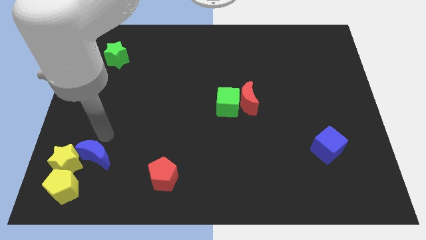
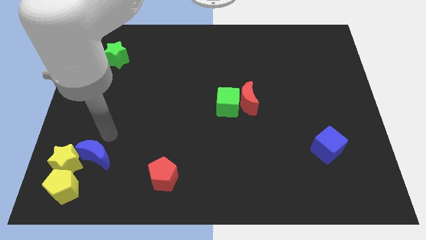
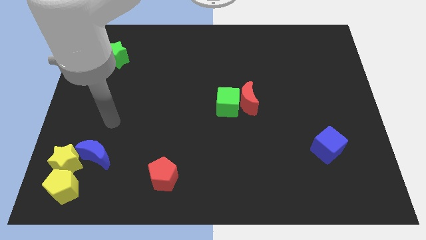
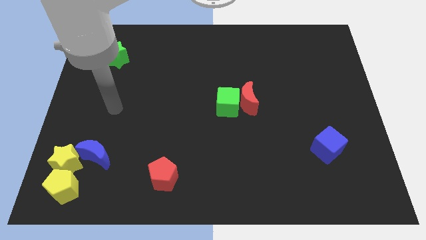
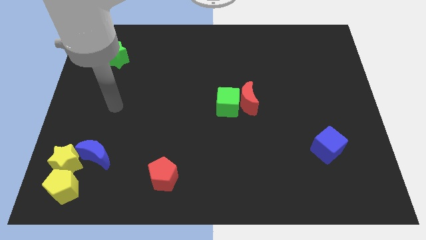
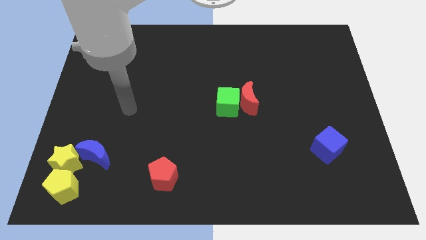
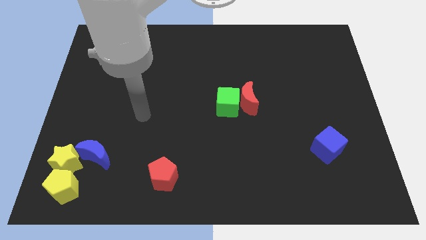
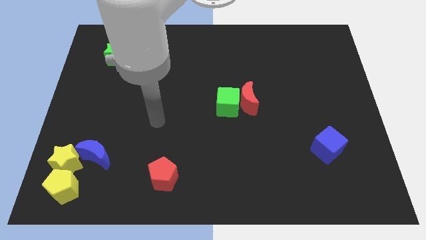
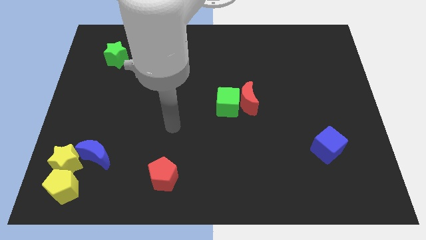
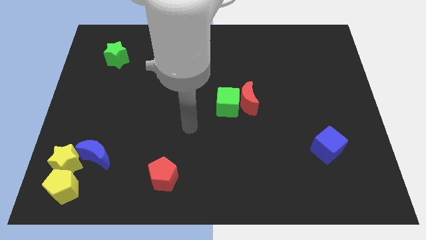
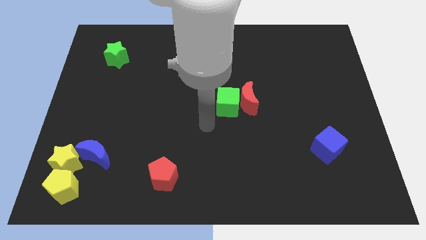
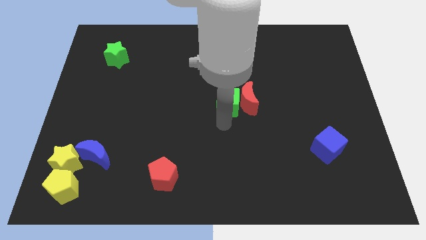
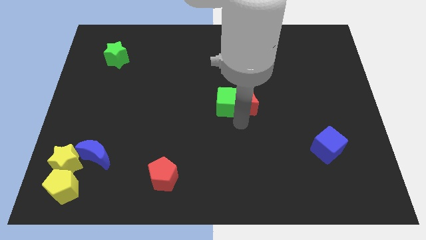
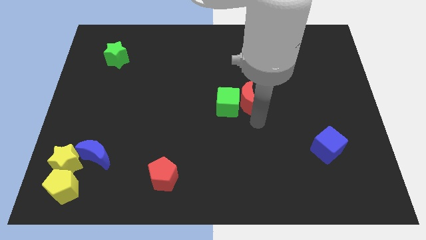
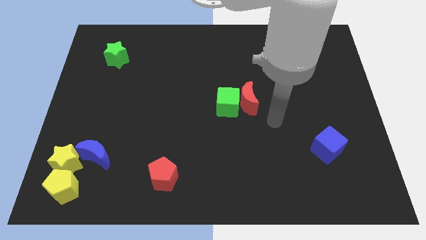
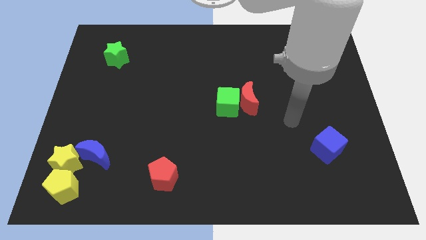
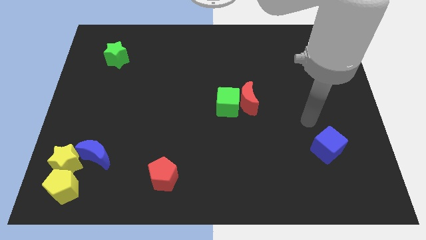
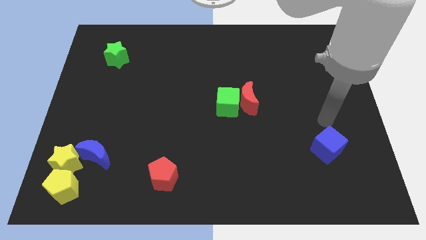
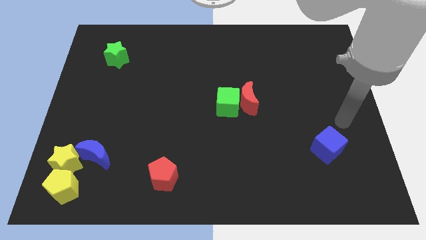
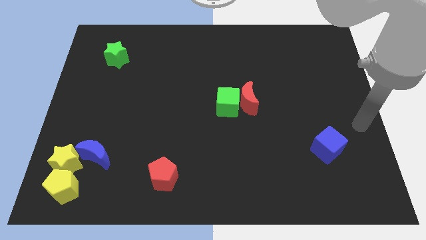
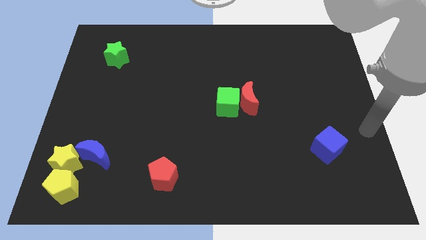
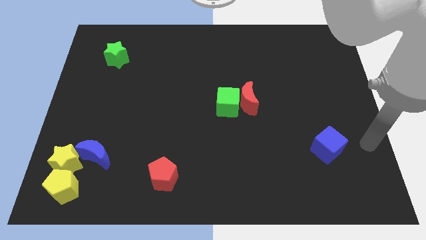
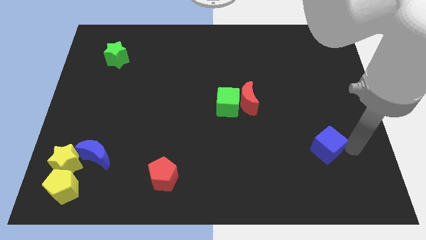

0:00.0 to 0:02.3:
move your arm from the top of the blue crescent to the right of the blue cube

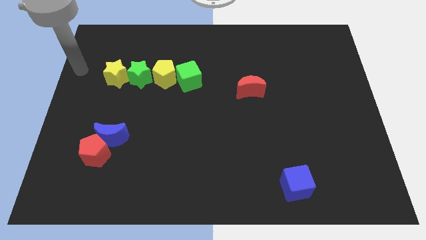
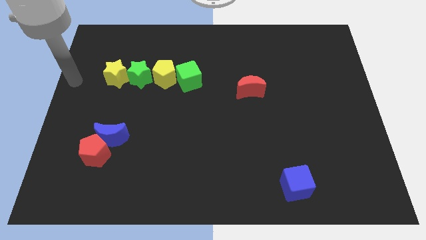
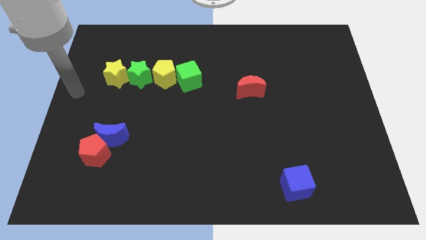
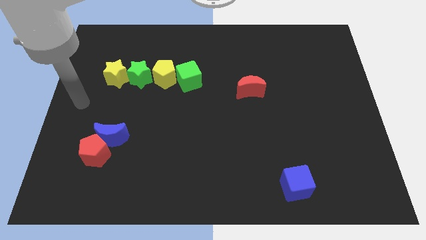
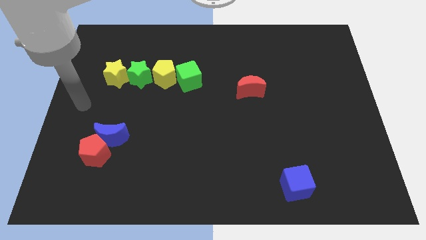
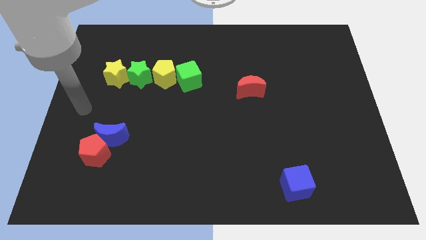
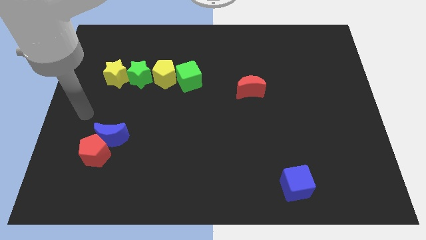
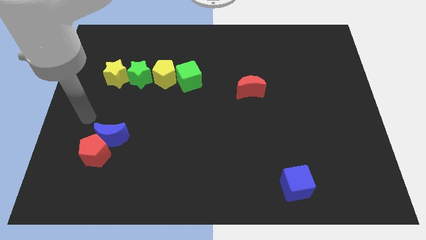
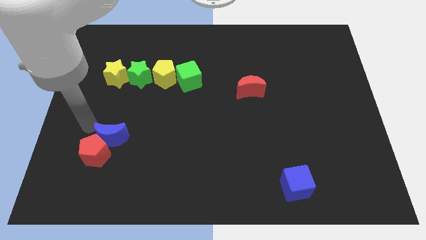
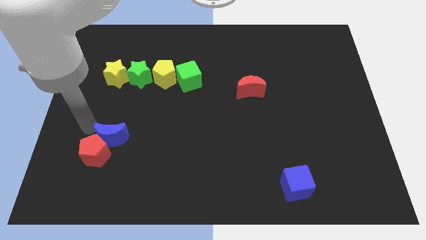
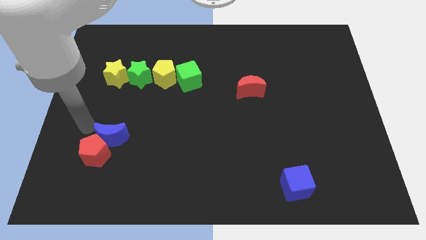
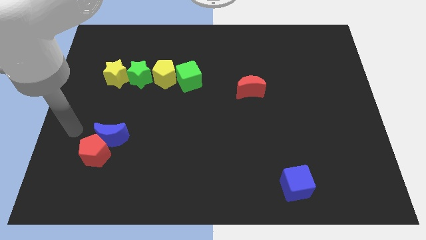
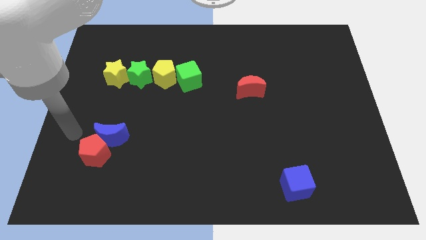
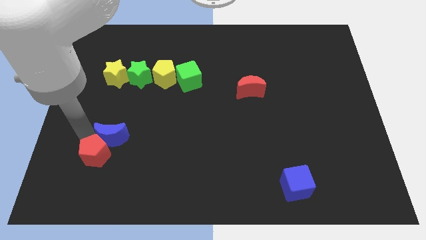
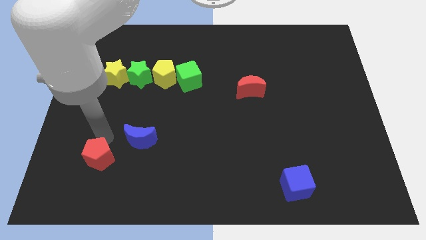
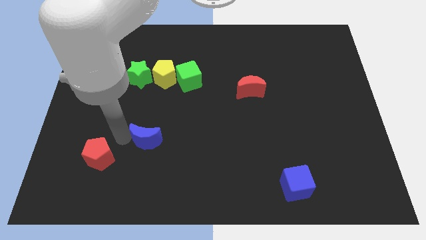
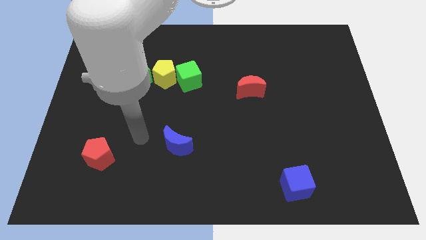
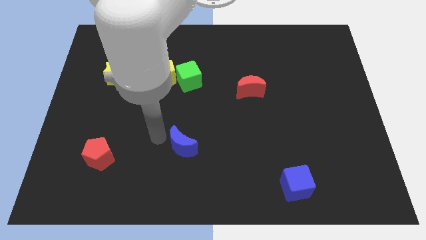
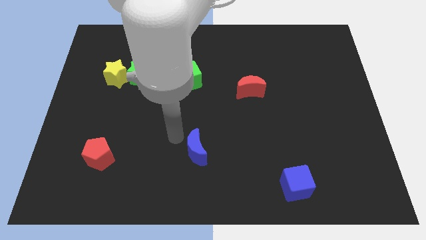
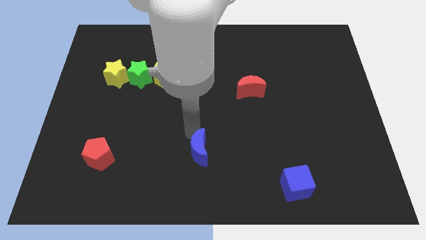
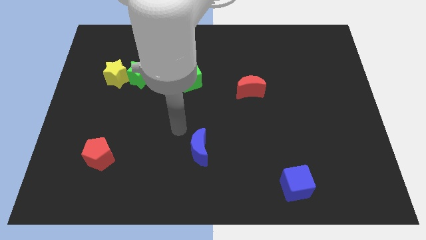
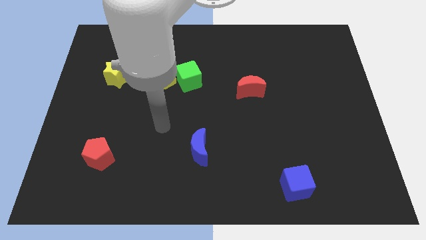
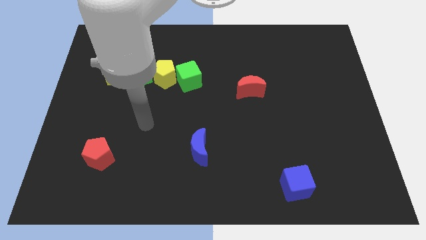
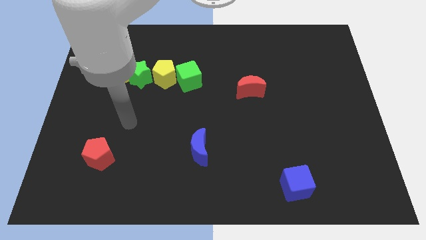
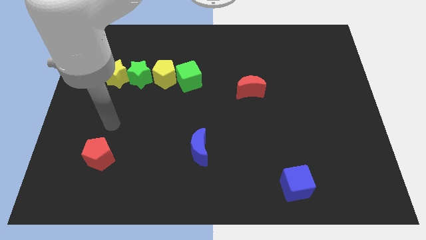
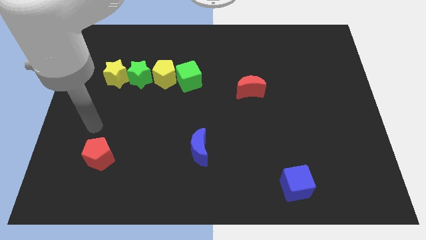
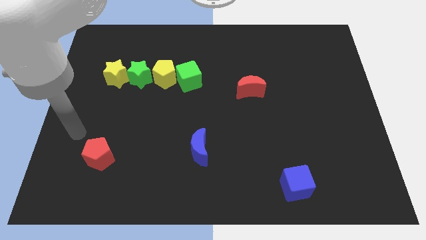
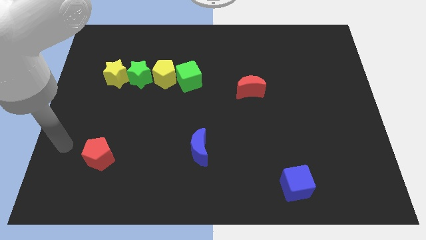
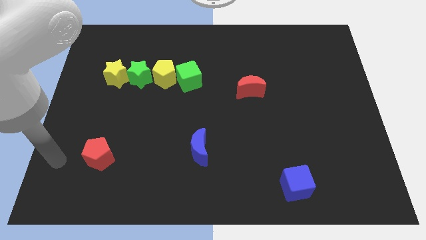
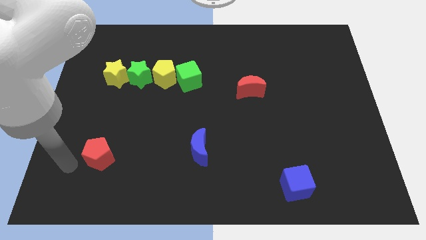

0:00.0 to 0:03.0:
separate the blue moon from the red pentagon

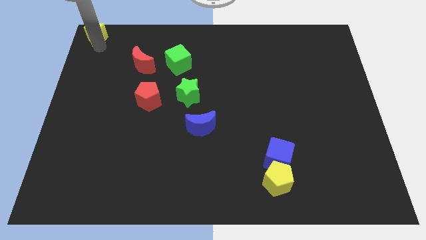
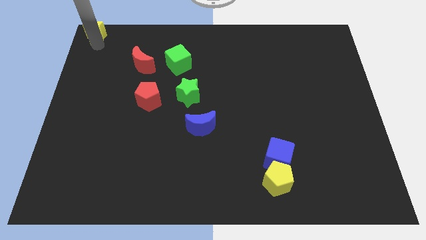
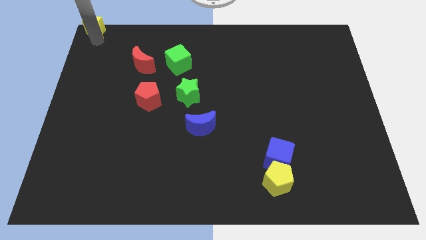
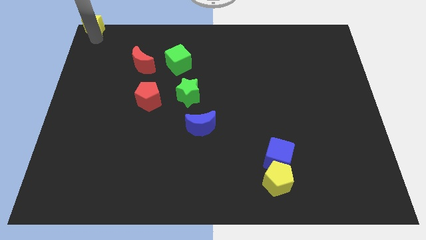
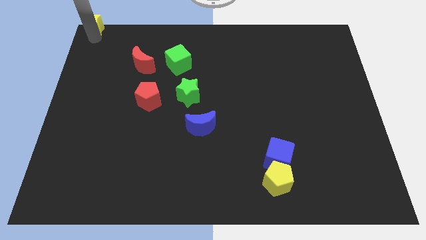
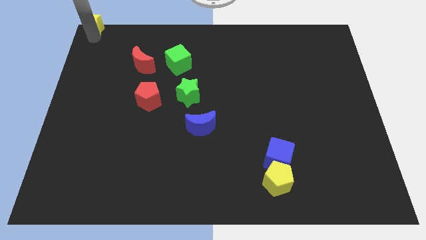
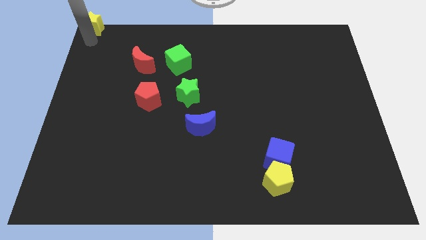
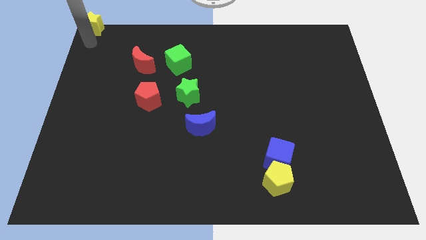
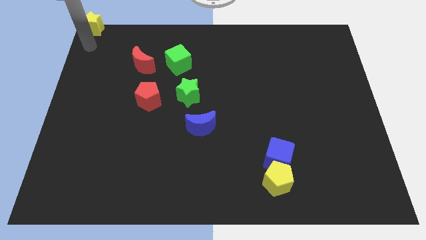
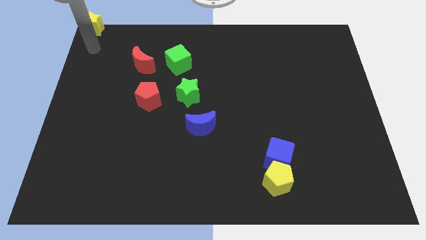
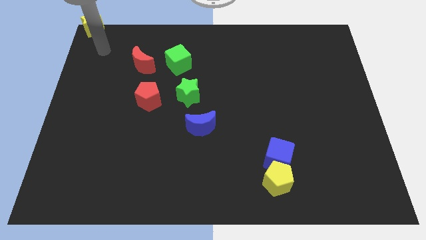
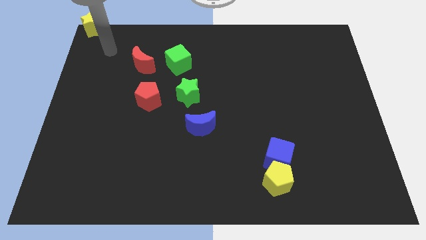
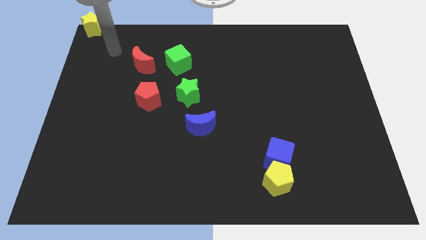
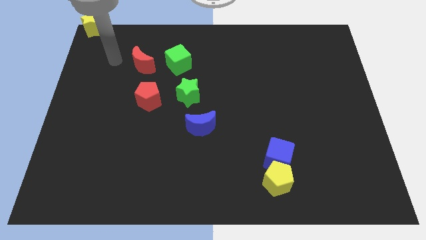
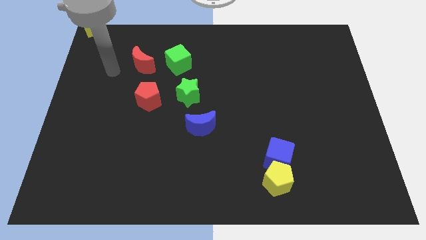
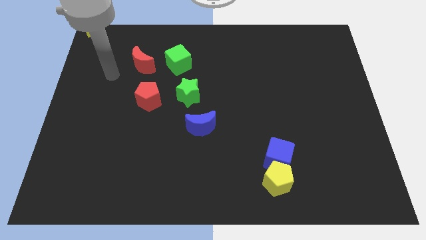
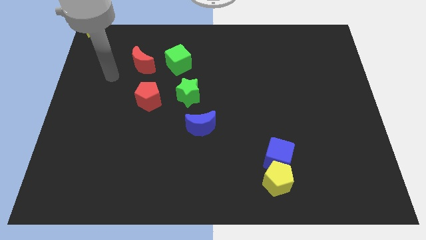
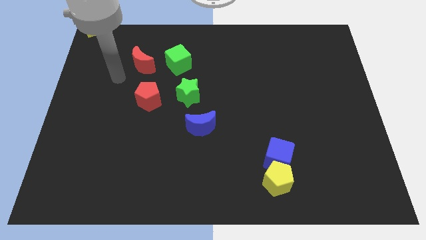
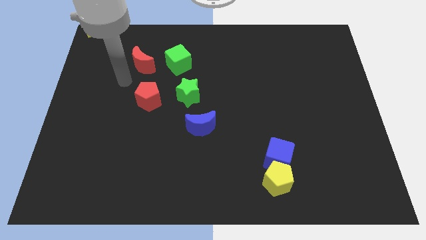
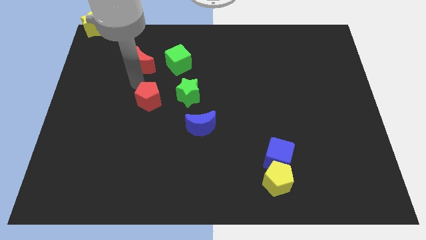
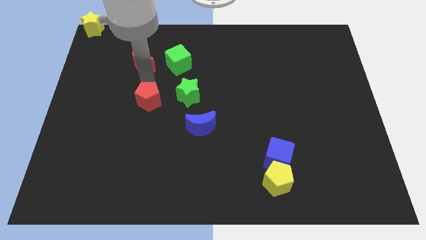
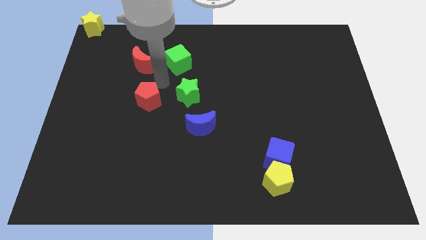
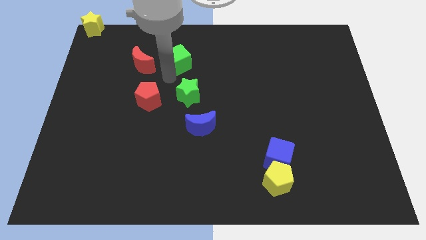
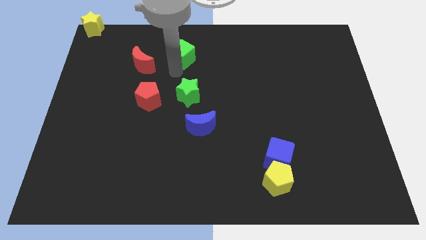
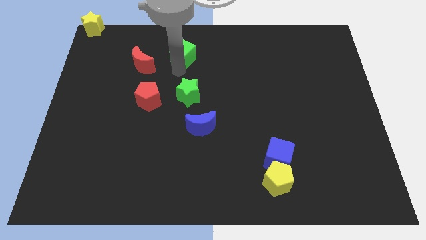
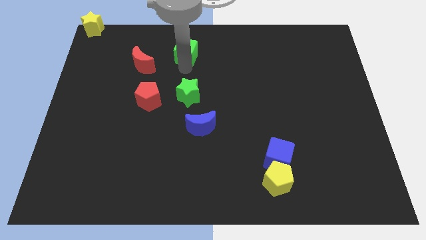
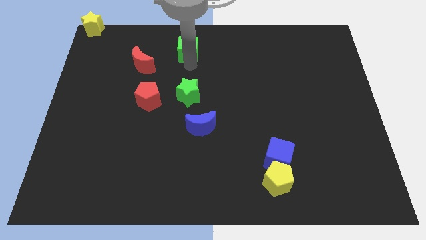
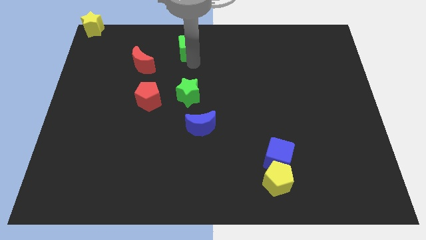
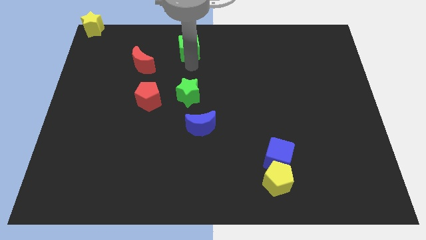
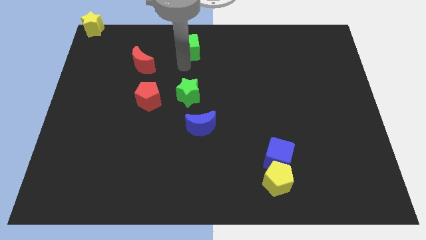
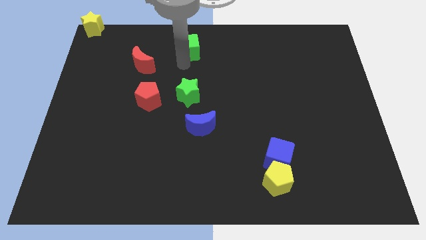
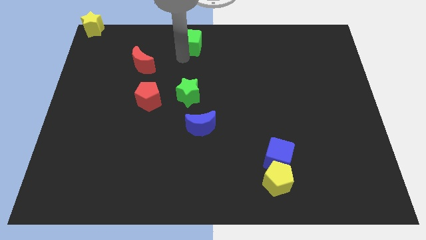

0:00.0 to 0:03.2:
move the green cube away from the green star

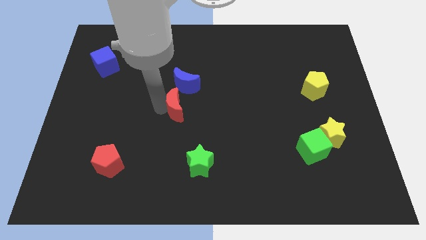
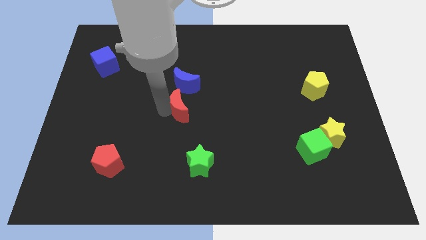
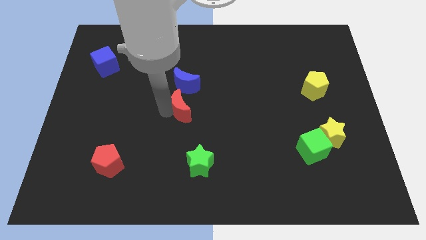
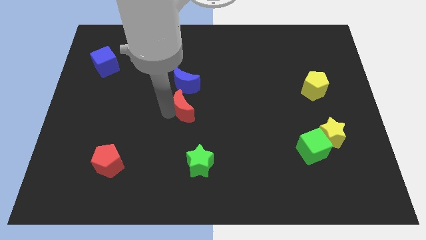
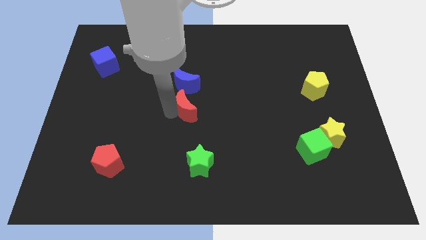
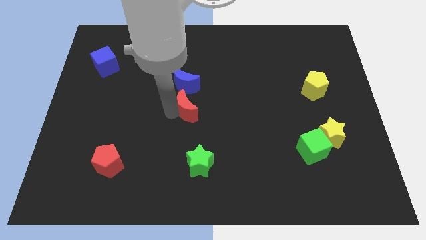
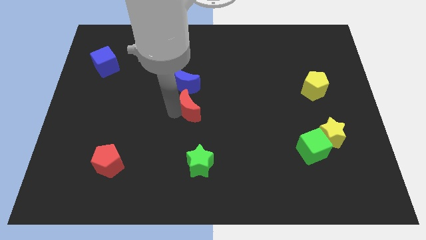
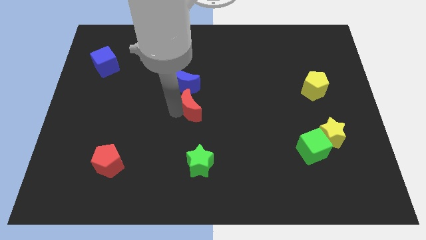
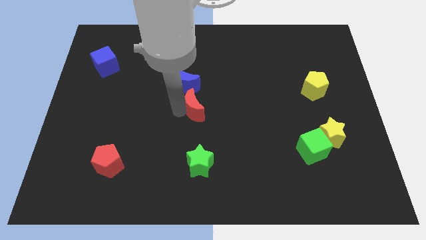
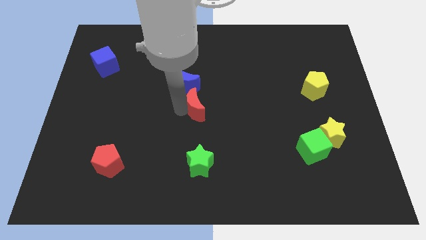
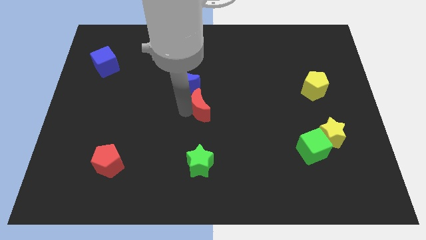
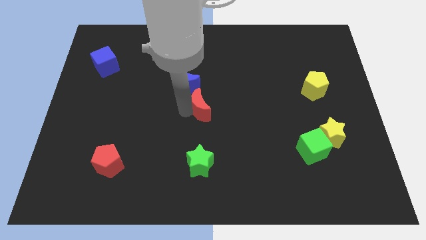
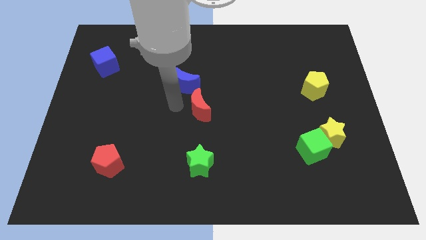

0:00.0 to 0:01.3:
put red moon above green star
